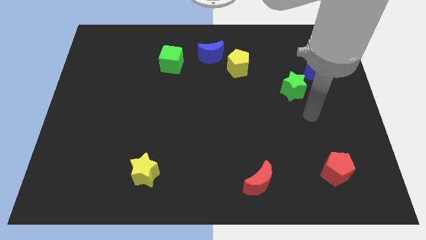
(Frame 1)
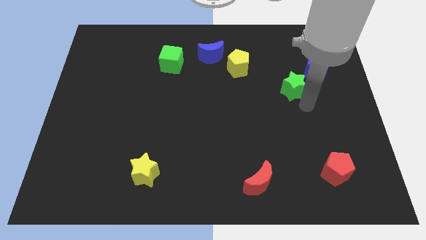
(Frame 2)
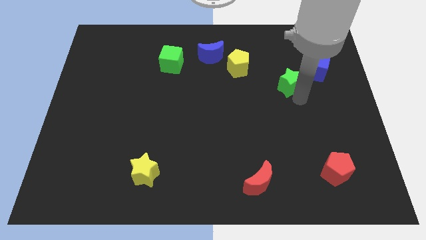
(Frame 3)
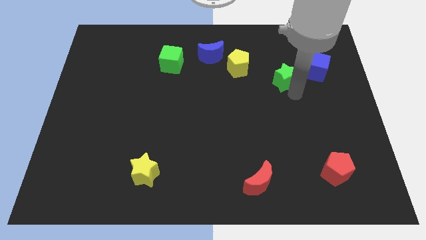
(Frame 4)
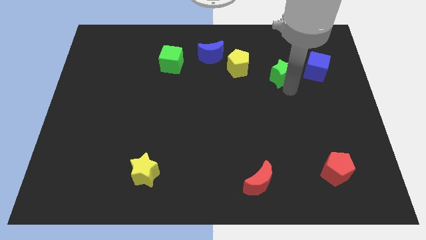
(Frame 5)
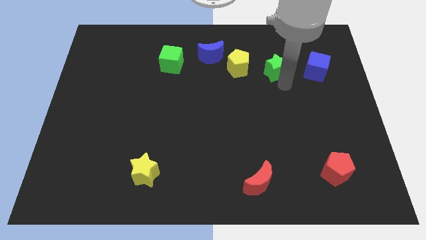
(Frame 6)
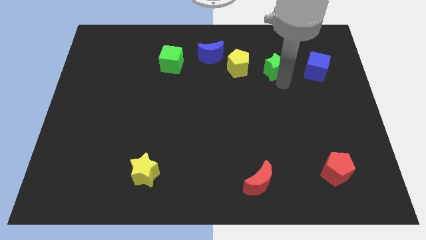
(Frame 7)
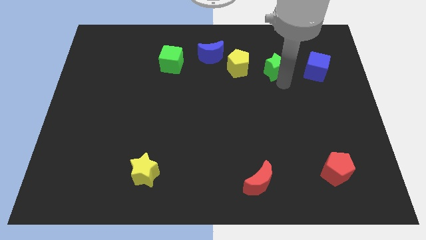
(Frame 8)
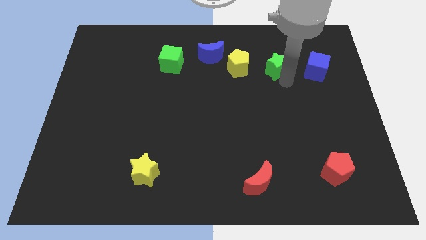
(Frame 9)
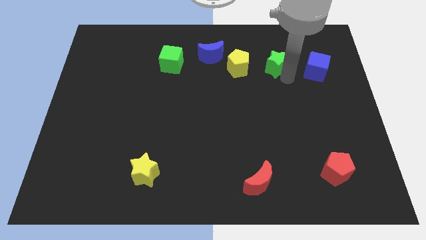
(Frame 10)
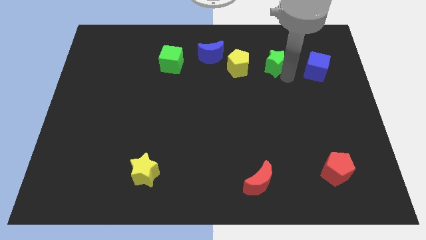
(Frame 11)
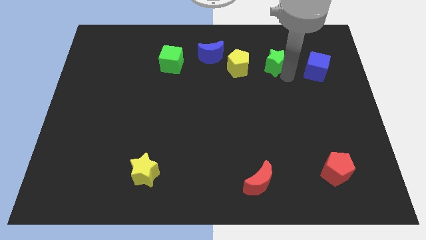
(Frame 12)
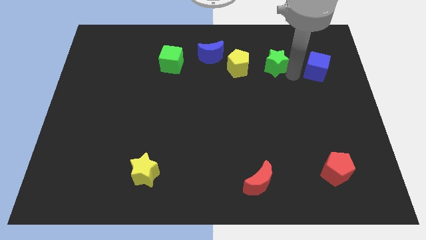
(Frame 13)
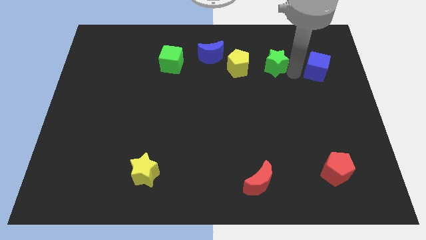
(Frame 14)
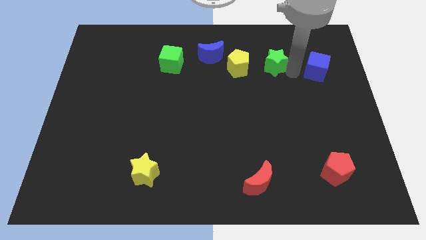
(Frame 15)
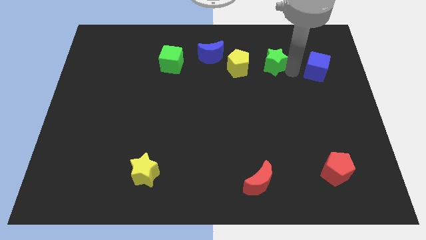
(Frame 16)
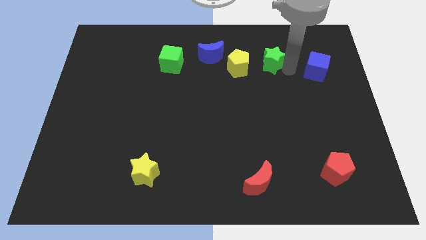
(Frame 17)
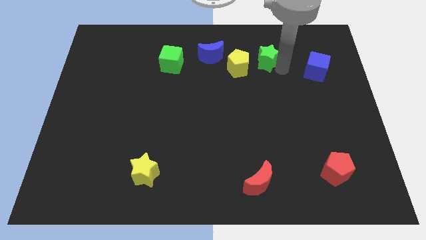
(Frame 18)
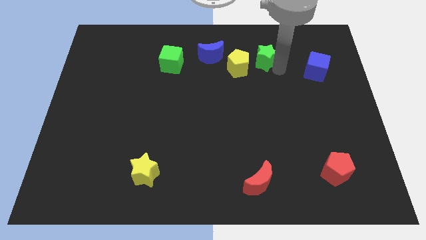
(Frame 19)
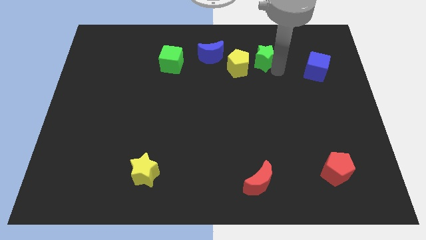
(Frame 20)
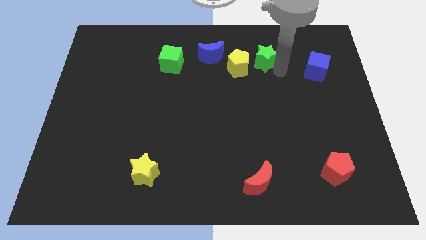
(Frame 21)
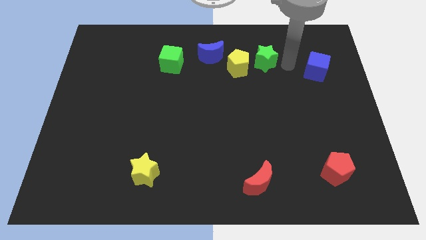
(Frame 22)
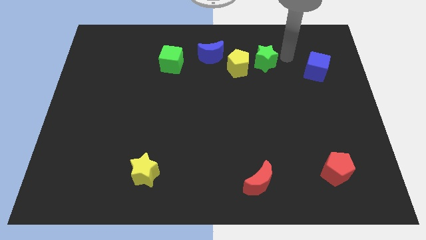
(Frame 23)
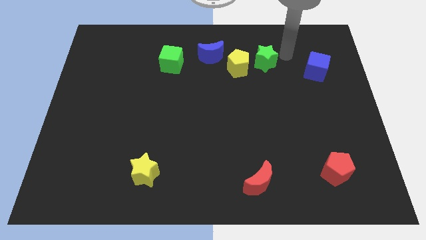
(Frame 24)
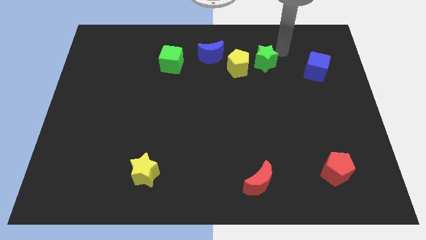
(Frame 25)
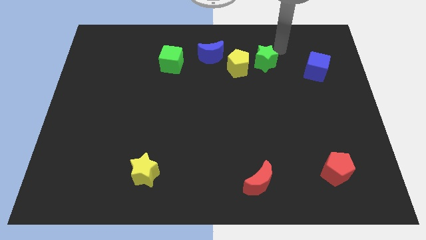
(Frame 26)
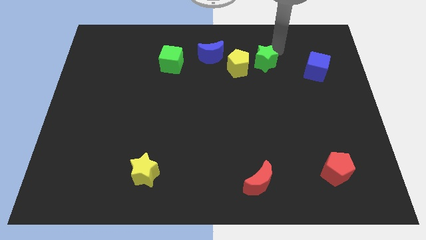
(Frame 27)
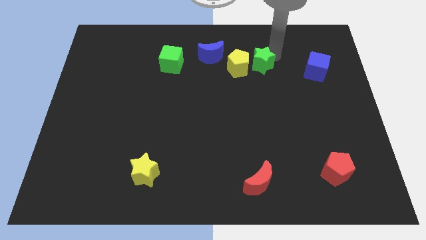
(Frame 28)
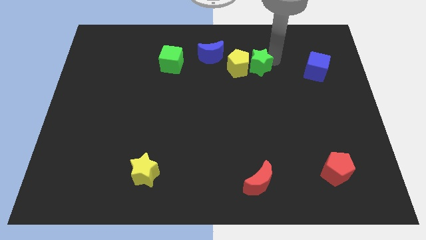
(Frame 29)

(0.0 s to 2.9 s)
place the green star close to the right of the yellow pentagon

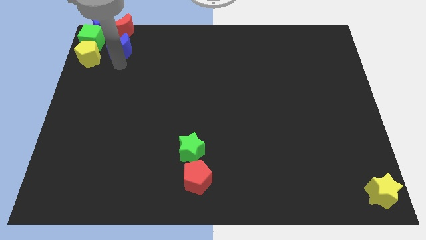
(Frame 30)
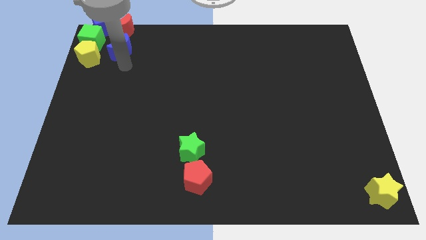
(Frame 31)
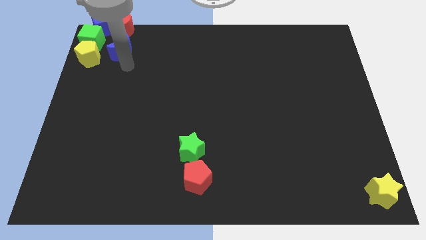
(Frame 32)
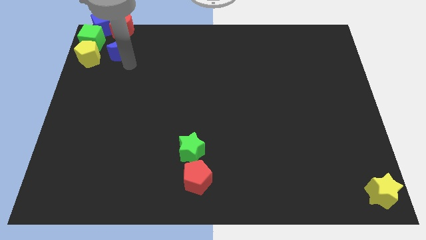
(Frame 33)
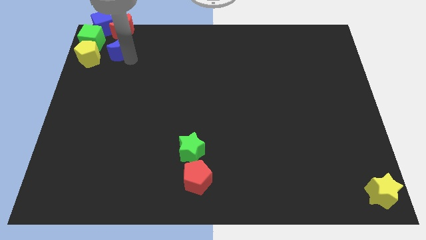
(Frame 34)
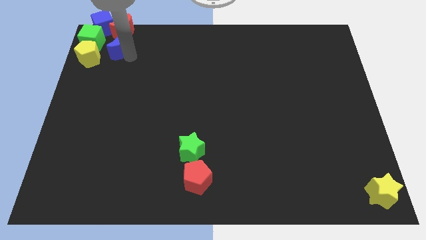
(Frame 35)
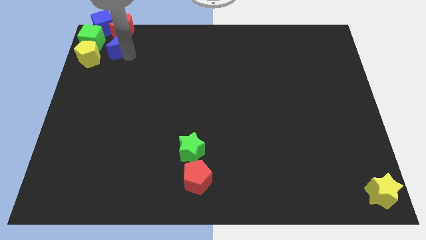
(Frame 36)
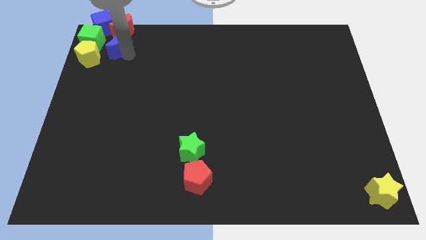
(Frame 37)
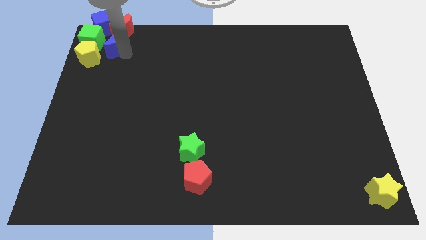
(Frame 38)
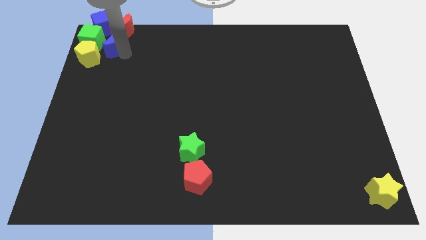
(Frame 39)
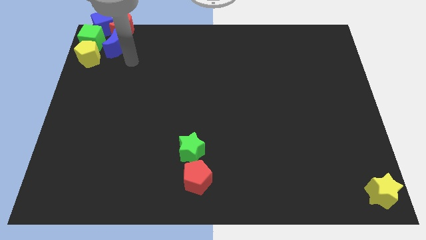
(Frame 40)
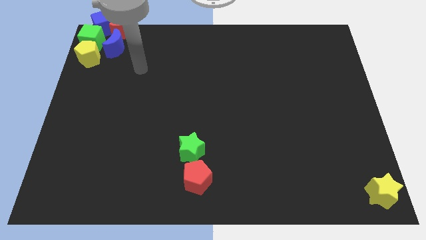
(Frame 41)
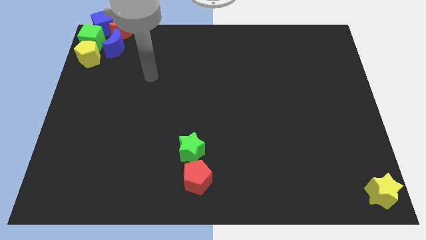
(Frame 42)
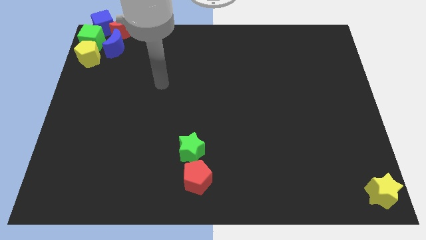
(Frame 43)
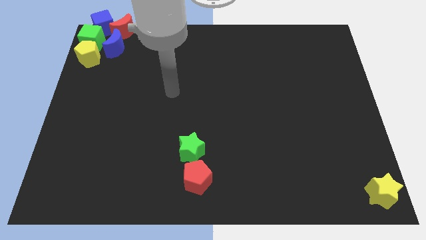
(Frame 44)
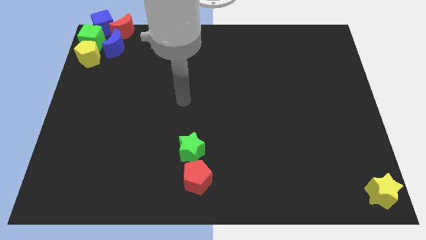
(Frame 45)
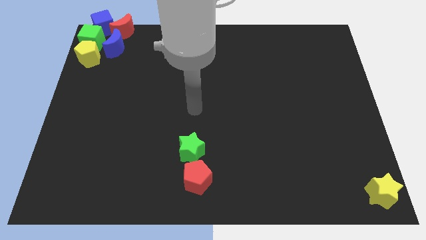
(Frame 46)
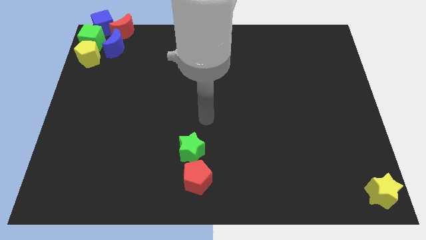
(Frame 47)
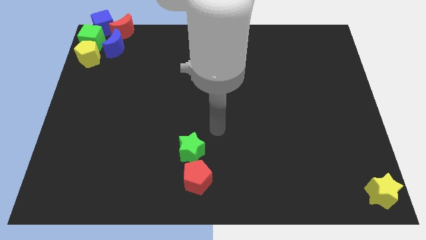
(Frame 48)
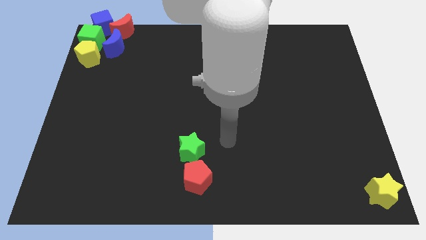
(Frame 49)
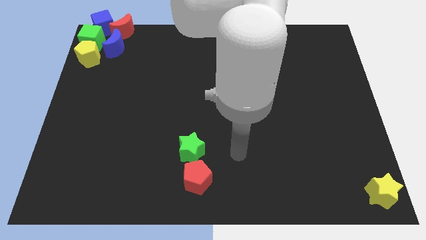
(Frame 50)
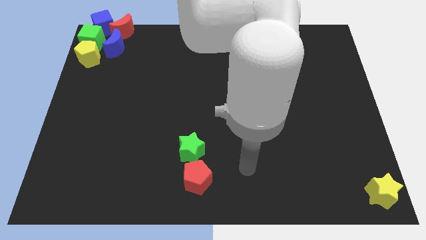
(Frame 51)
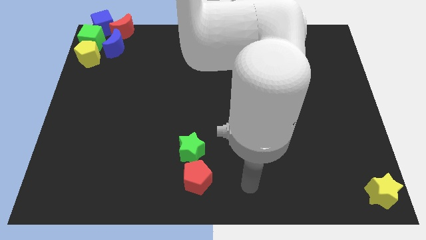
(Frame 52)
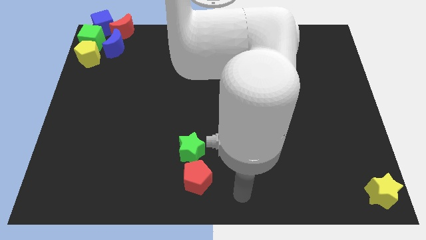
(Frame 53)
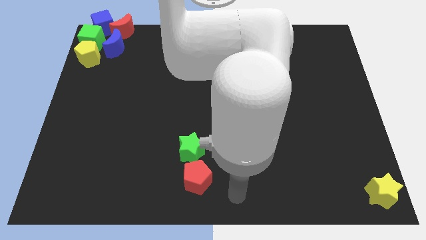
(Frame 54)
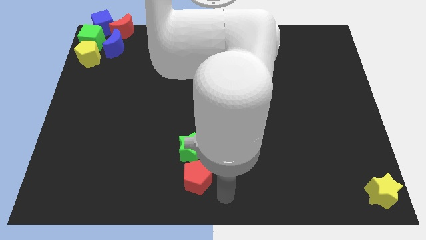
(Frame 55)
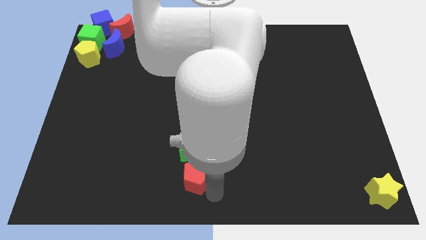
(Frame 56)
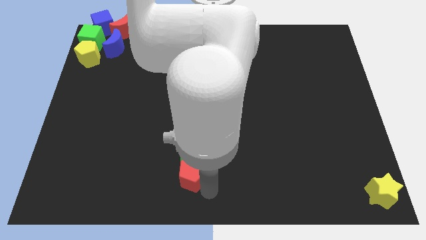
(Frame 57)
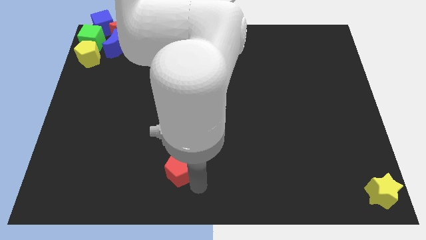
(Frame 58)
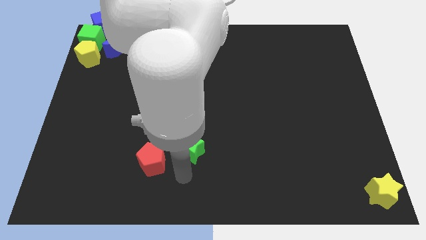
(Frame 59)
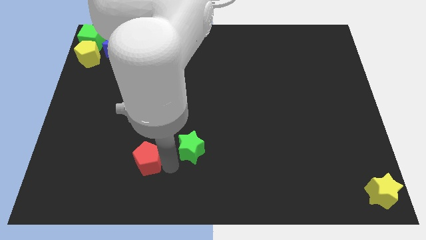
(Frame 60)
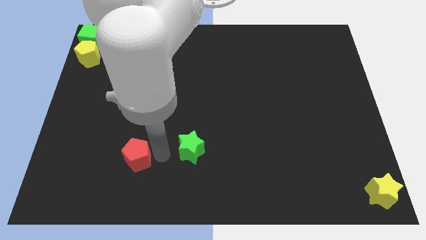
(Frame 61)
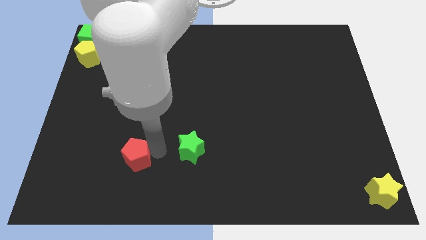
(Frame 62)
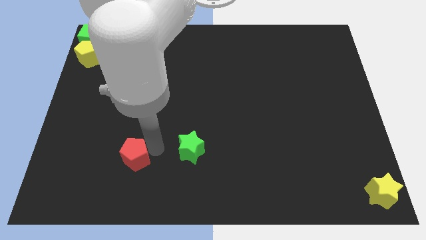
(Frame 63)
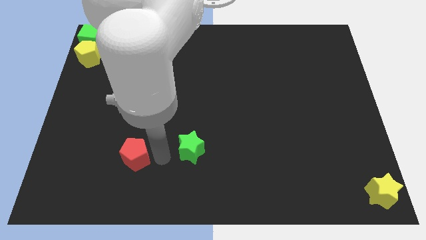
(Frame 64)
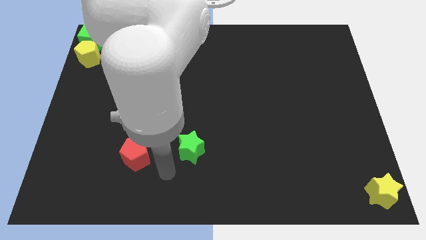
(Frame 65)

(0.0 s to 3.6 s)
separate the red pentagon from the green star

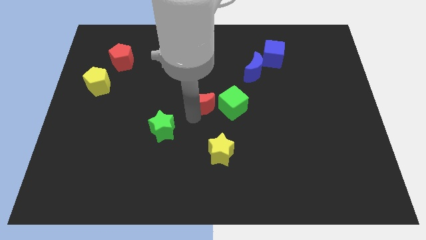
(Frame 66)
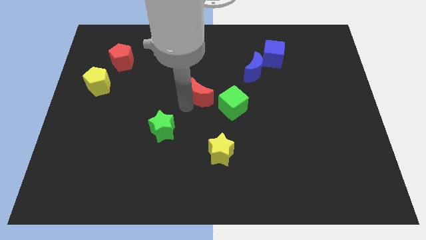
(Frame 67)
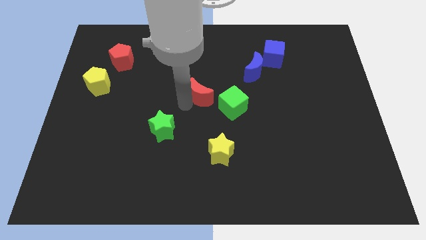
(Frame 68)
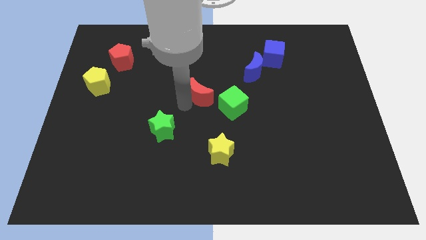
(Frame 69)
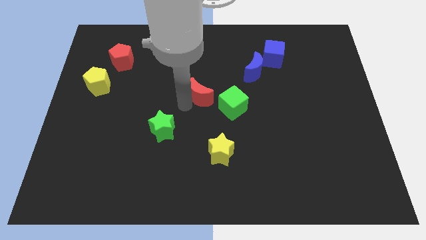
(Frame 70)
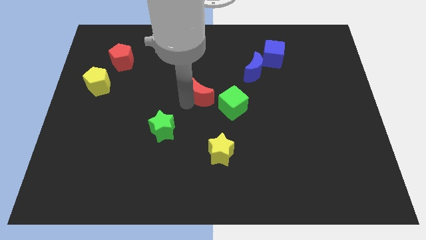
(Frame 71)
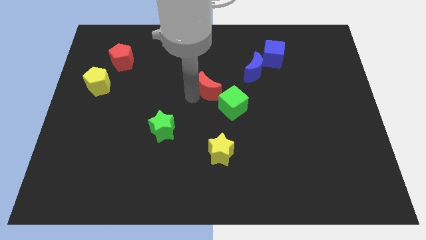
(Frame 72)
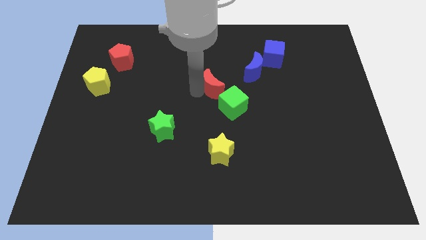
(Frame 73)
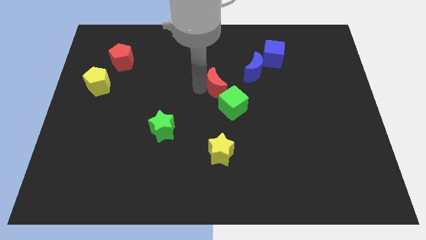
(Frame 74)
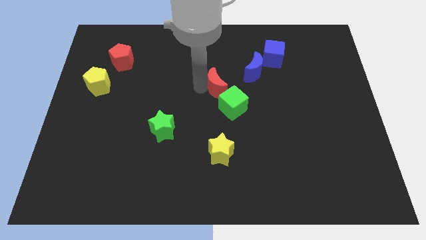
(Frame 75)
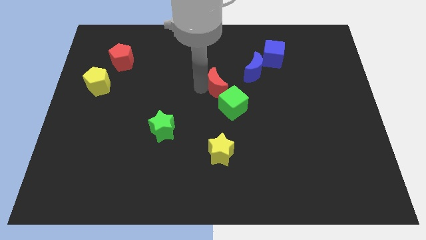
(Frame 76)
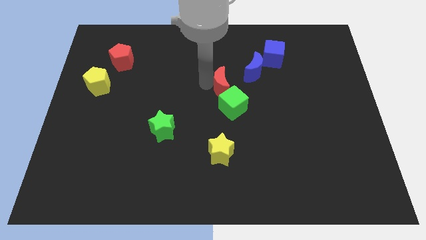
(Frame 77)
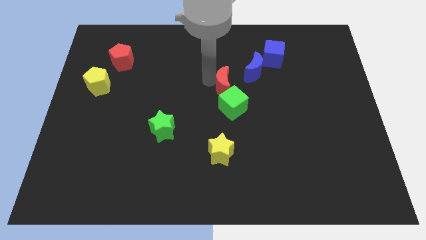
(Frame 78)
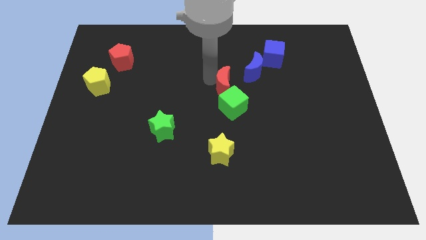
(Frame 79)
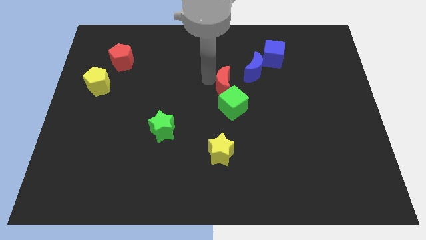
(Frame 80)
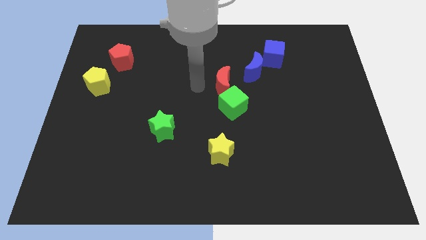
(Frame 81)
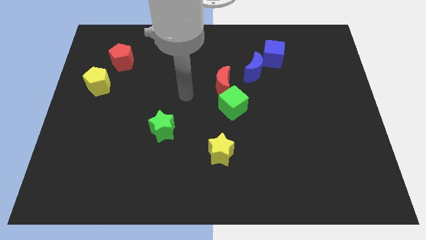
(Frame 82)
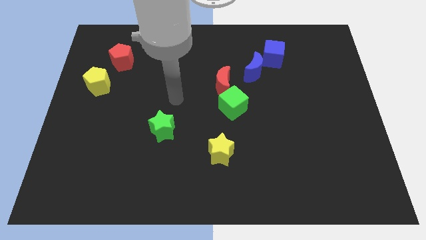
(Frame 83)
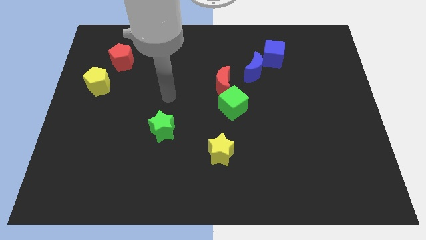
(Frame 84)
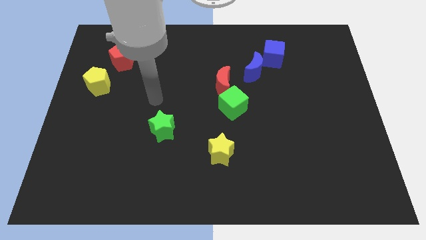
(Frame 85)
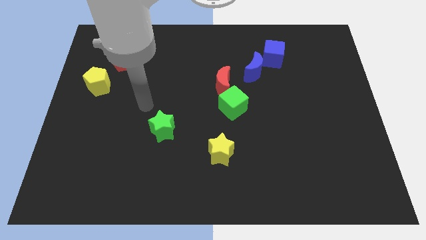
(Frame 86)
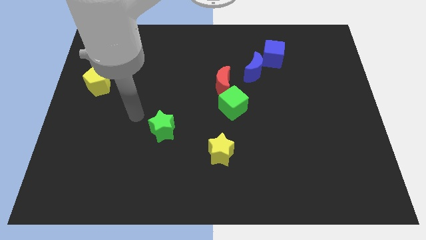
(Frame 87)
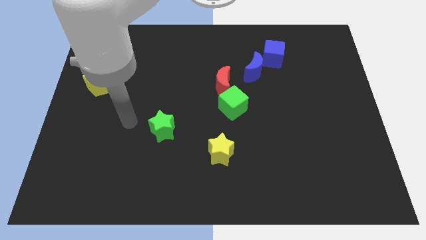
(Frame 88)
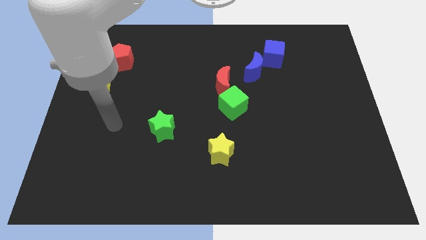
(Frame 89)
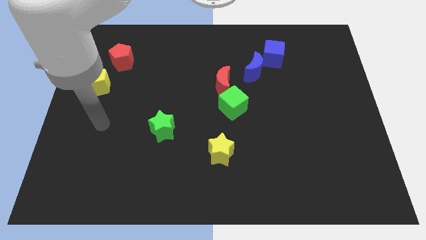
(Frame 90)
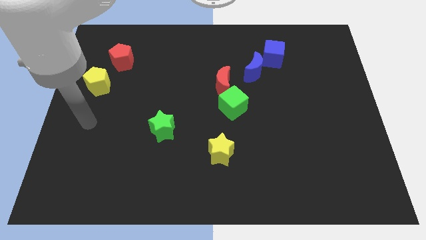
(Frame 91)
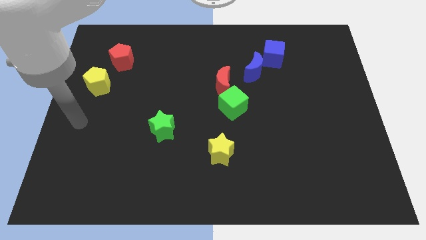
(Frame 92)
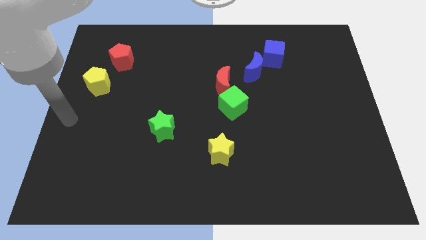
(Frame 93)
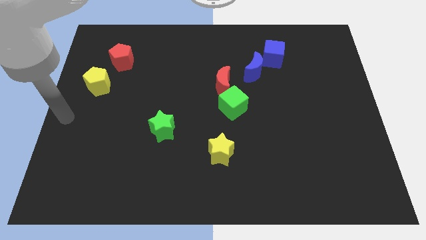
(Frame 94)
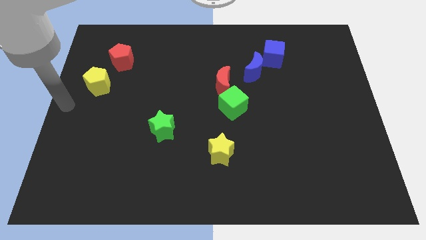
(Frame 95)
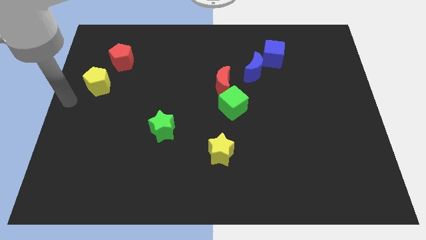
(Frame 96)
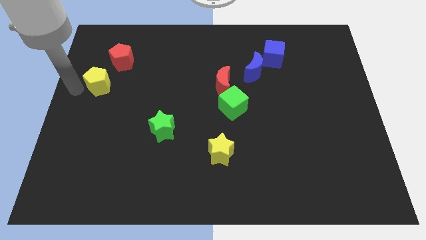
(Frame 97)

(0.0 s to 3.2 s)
place red crescent to the top of green cube
